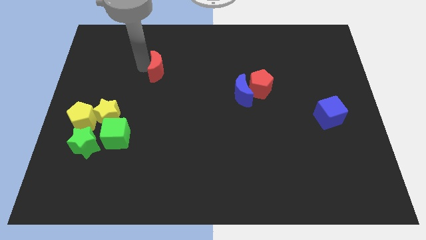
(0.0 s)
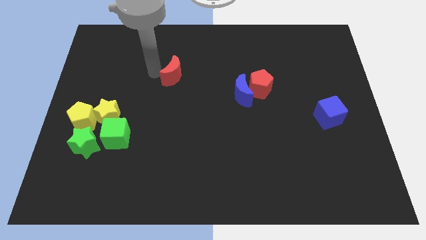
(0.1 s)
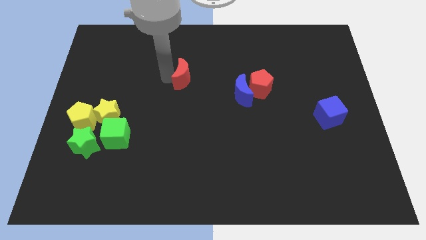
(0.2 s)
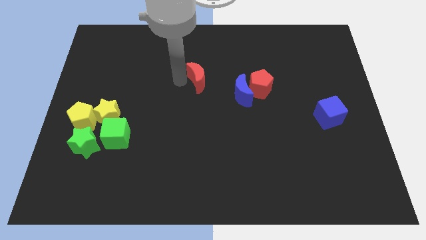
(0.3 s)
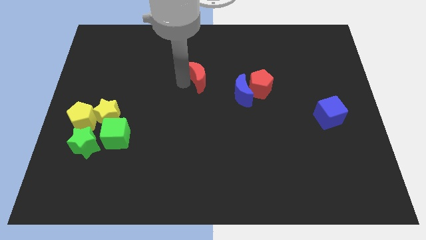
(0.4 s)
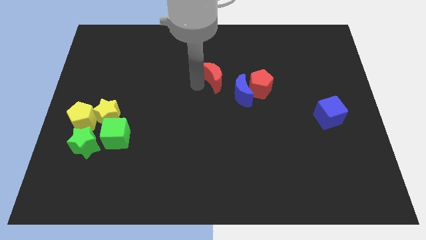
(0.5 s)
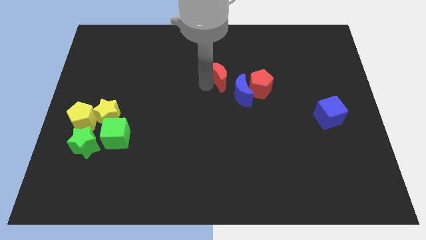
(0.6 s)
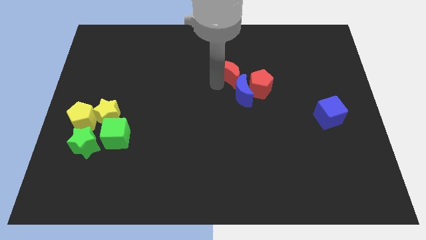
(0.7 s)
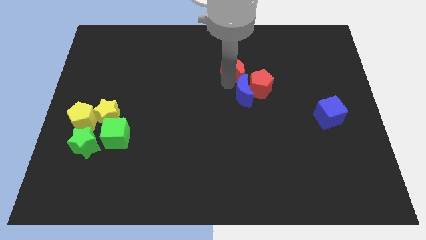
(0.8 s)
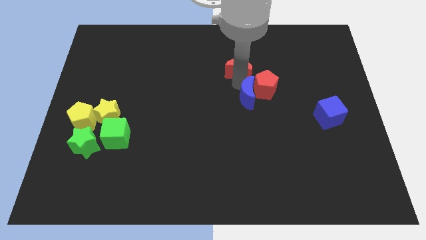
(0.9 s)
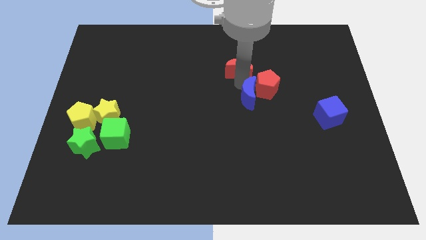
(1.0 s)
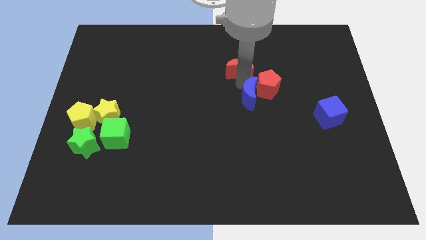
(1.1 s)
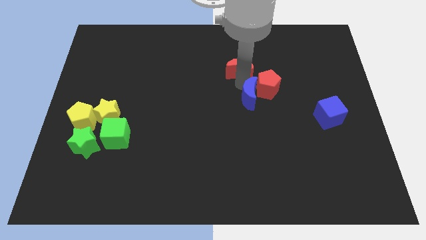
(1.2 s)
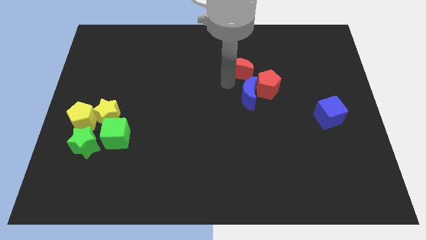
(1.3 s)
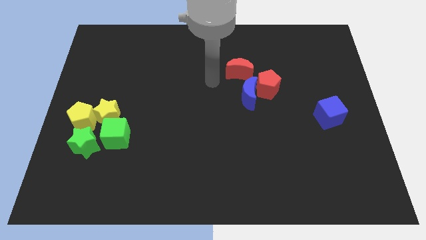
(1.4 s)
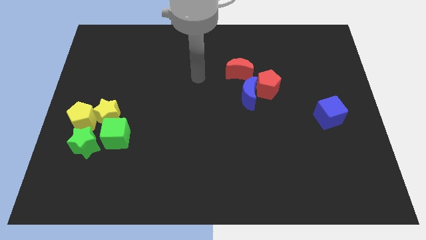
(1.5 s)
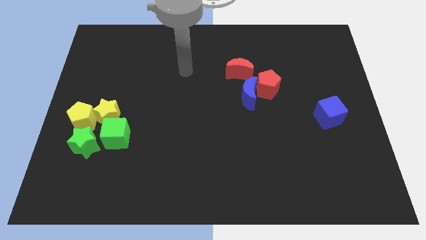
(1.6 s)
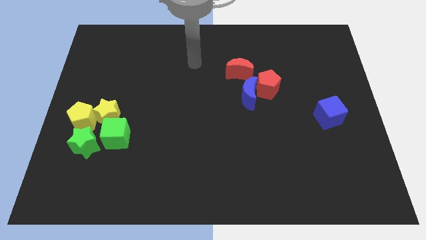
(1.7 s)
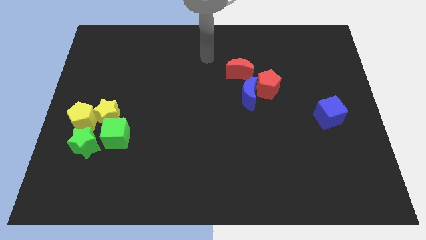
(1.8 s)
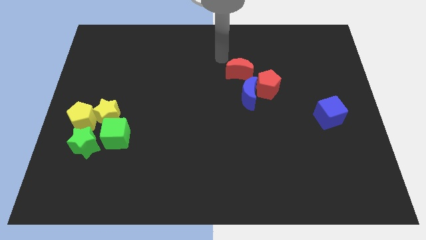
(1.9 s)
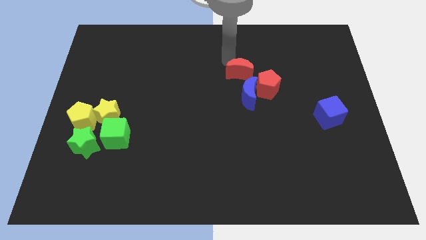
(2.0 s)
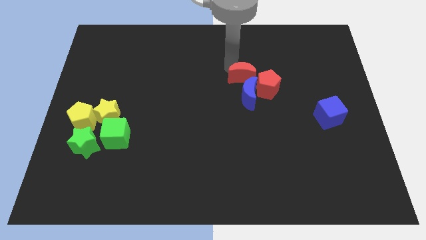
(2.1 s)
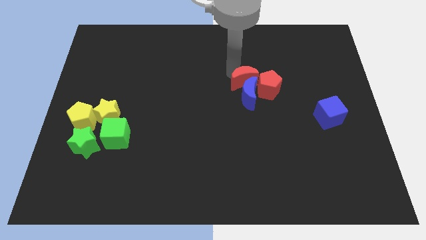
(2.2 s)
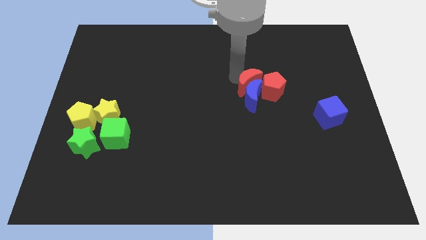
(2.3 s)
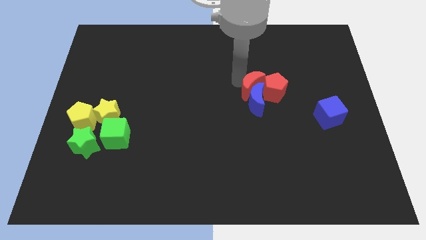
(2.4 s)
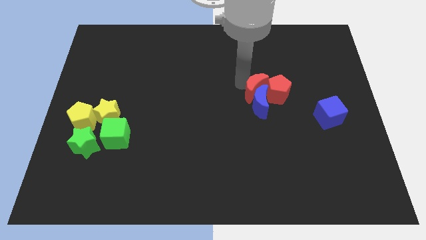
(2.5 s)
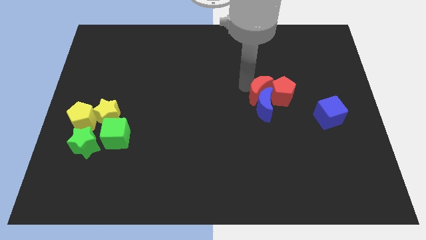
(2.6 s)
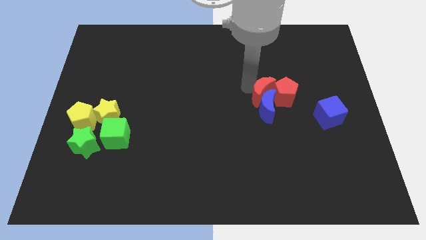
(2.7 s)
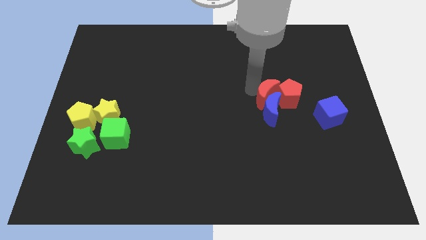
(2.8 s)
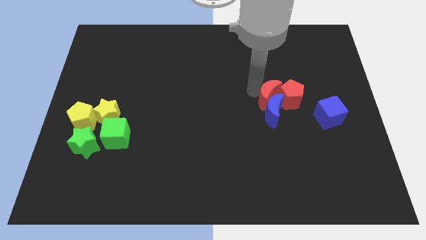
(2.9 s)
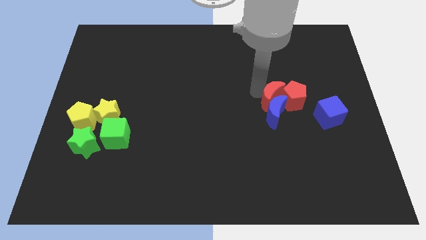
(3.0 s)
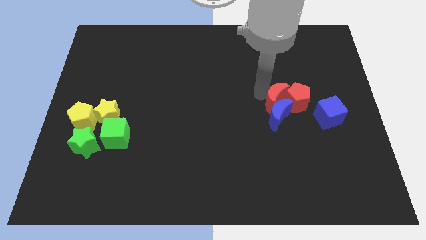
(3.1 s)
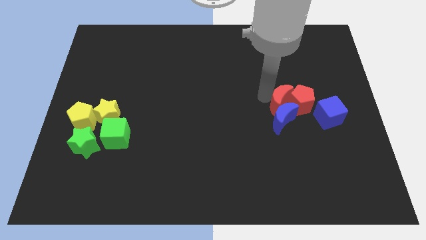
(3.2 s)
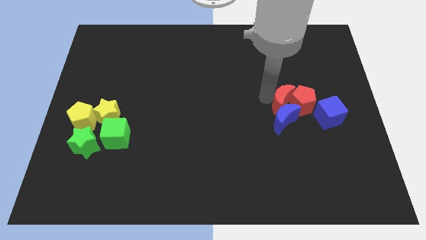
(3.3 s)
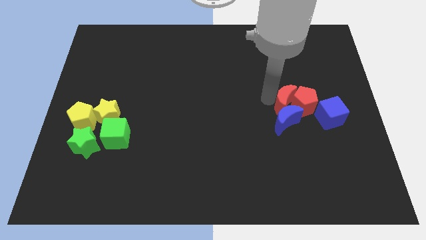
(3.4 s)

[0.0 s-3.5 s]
push the red crescent into the red pentagon towards the right

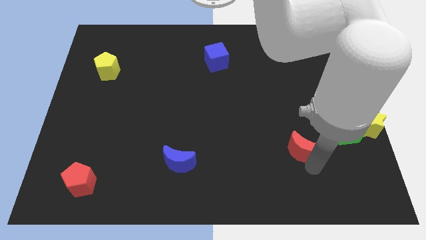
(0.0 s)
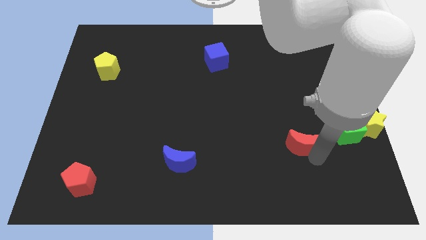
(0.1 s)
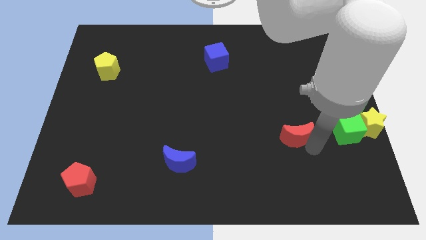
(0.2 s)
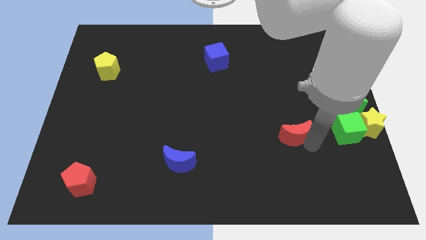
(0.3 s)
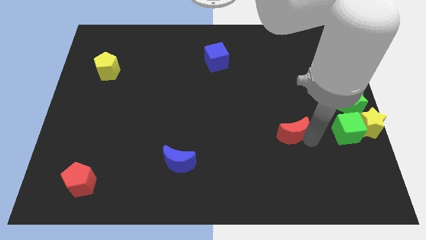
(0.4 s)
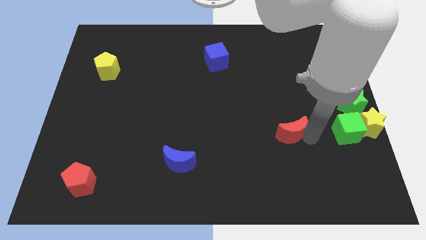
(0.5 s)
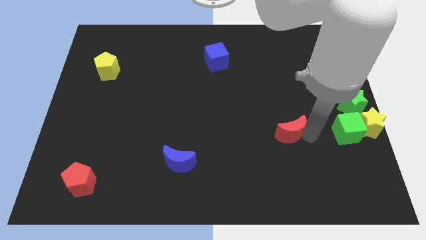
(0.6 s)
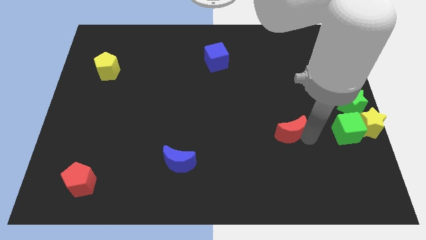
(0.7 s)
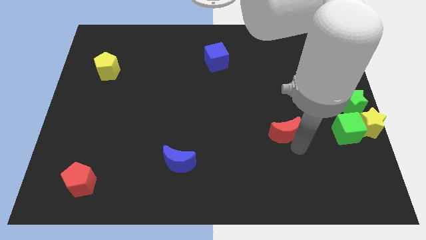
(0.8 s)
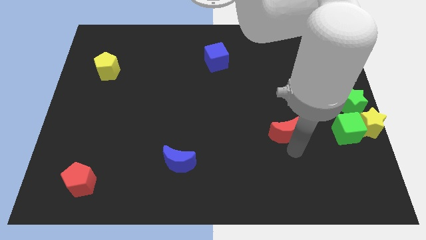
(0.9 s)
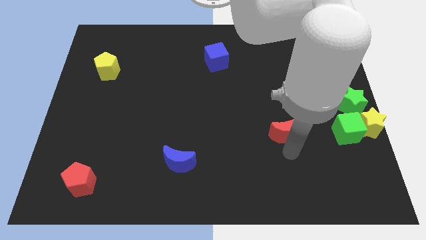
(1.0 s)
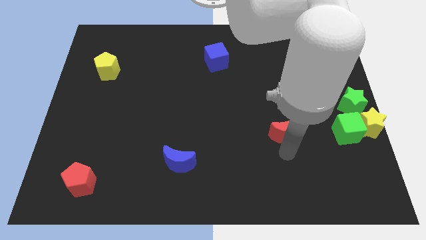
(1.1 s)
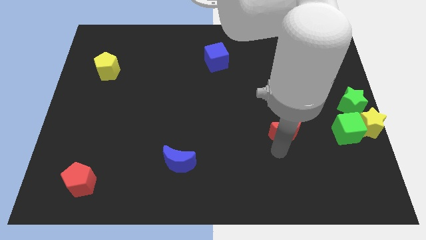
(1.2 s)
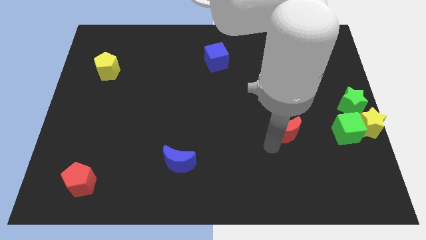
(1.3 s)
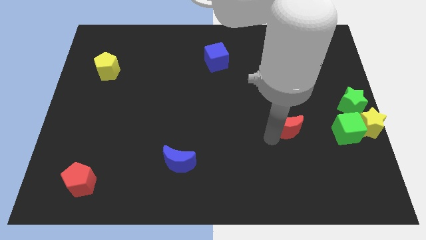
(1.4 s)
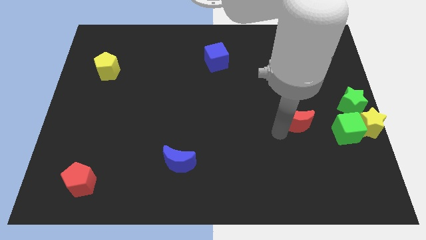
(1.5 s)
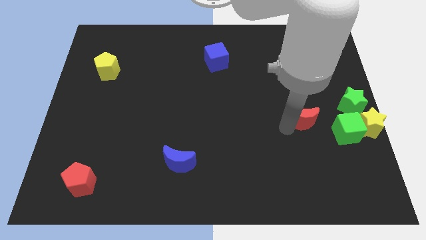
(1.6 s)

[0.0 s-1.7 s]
place the red crescent in between the green blocks

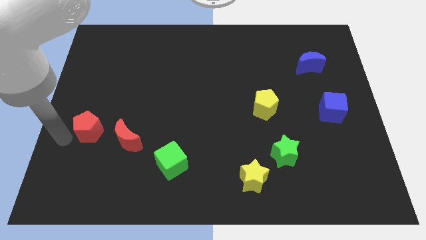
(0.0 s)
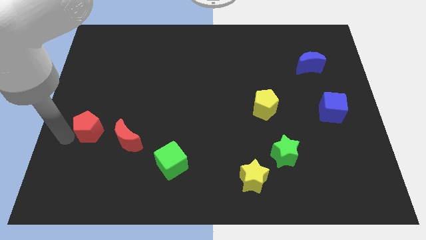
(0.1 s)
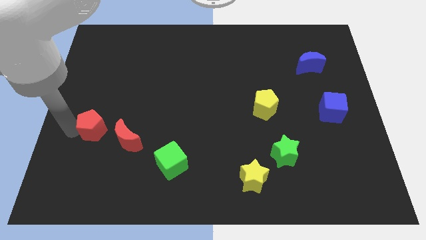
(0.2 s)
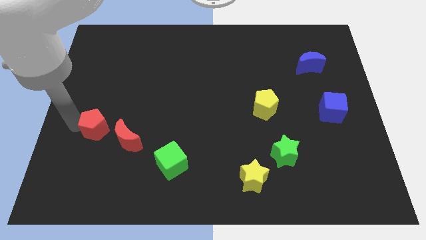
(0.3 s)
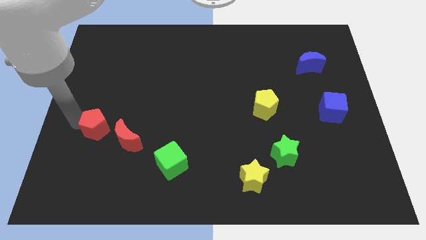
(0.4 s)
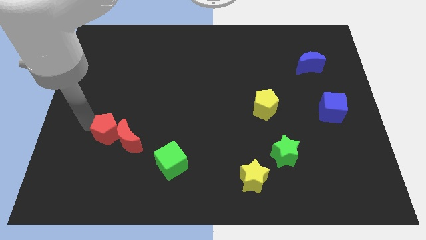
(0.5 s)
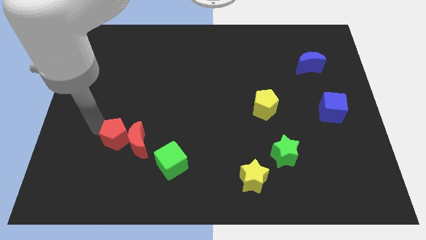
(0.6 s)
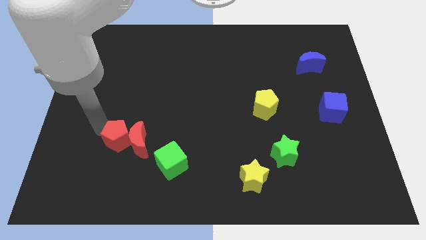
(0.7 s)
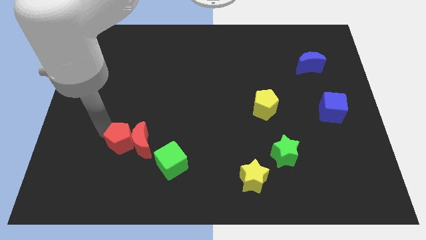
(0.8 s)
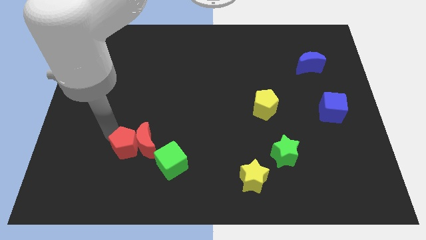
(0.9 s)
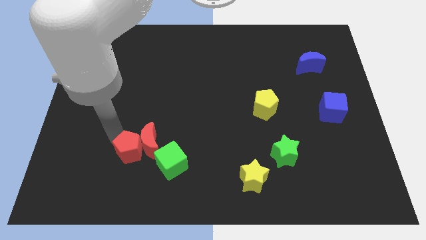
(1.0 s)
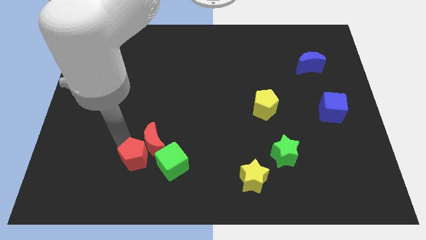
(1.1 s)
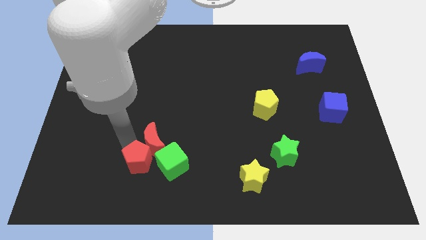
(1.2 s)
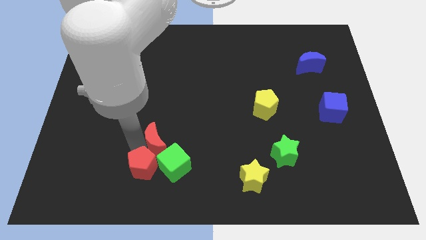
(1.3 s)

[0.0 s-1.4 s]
push the red blocks into the left side of the green cube

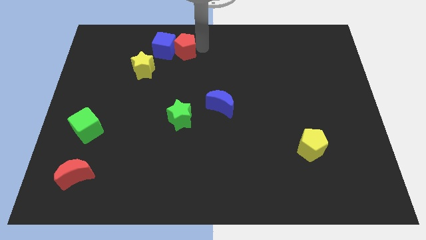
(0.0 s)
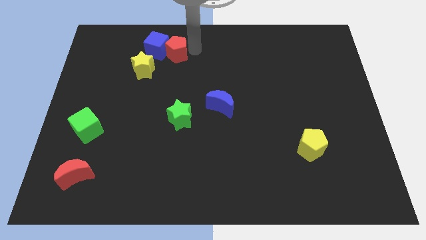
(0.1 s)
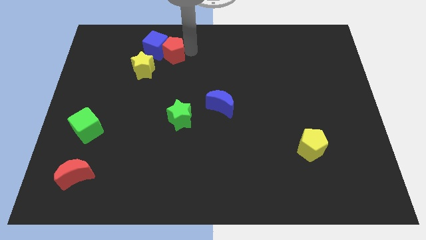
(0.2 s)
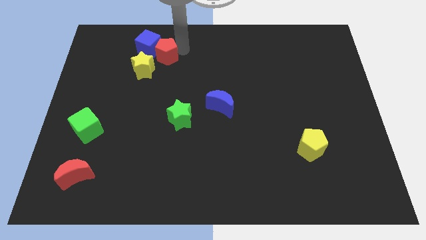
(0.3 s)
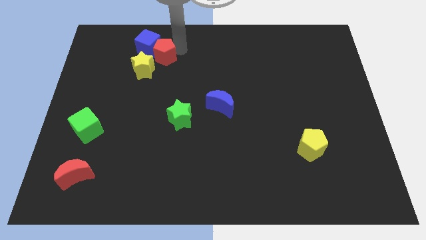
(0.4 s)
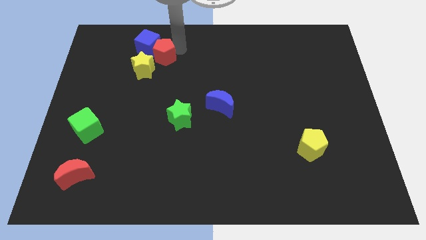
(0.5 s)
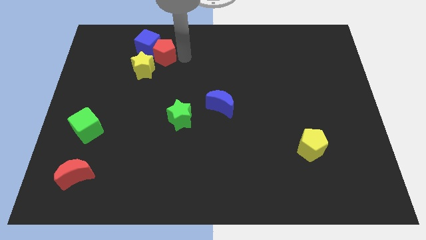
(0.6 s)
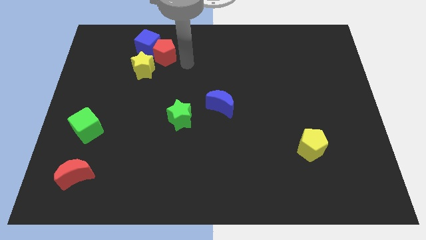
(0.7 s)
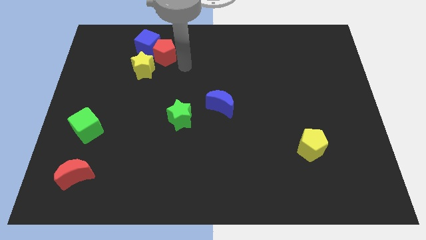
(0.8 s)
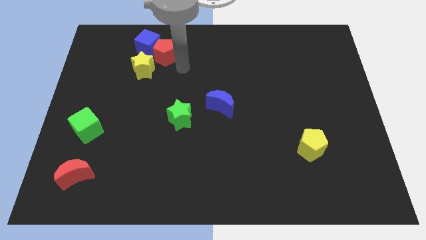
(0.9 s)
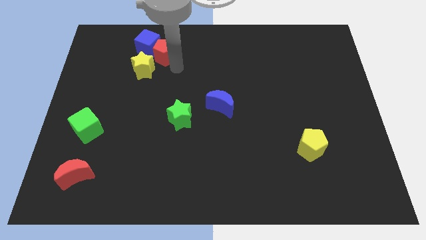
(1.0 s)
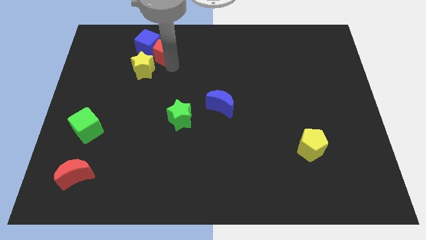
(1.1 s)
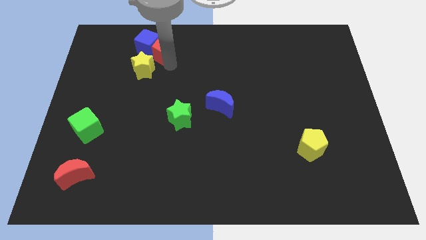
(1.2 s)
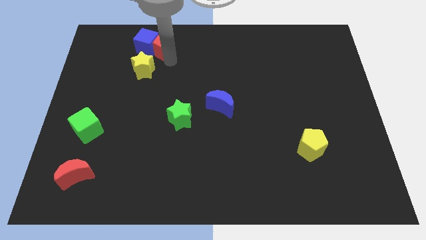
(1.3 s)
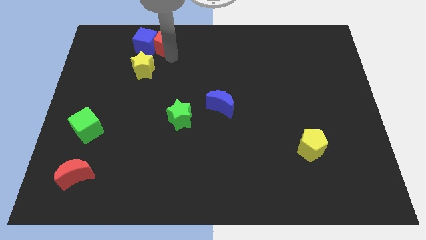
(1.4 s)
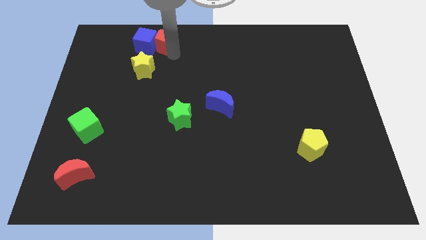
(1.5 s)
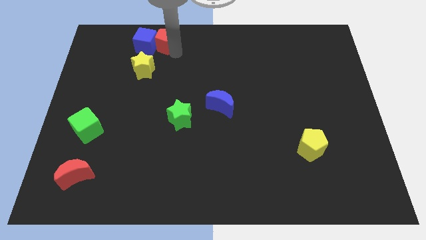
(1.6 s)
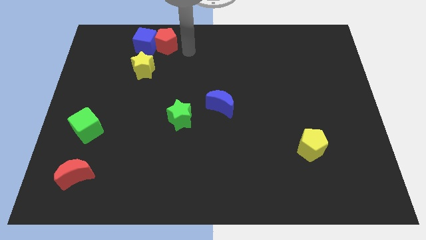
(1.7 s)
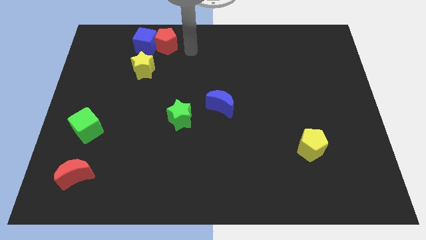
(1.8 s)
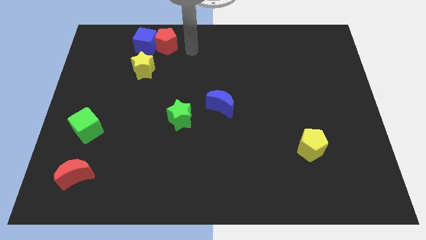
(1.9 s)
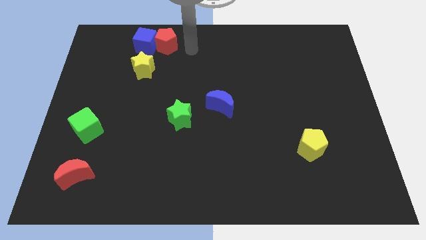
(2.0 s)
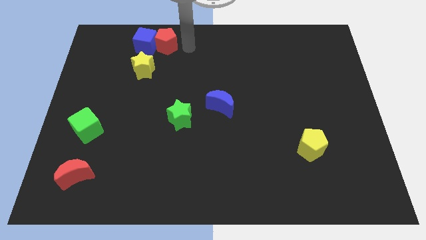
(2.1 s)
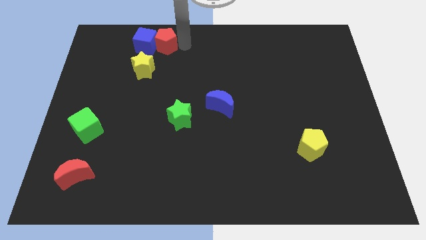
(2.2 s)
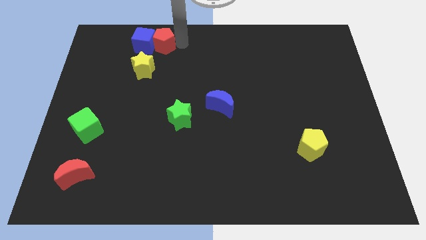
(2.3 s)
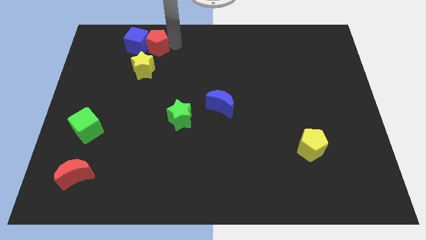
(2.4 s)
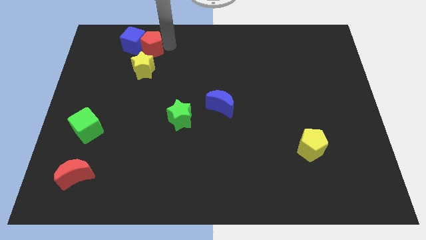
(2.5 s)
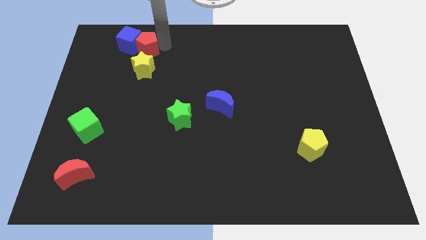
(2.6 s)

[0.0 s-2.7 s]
push red pentagon above yellow star

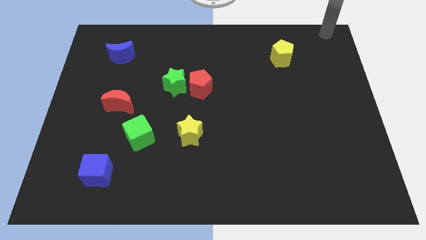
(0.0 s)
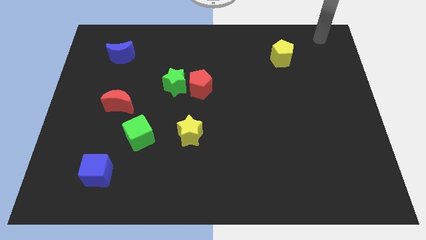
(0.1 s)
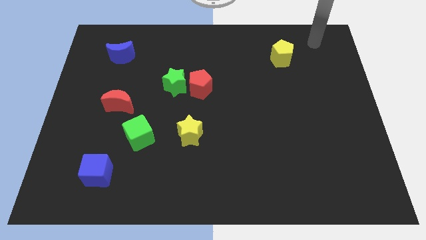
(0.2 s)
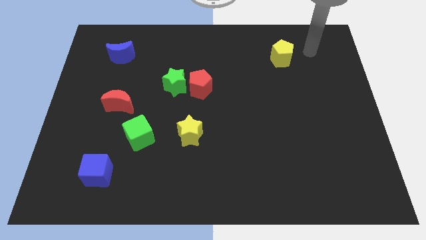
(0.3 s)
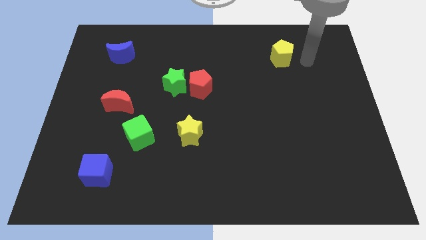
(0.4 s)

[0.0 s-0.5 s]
place your arm to the right side of the yellow pentagon
